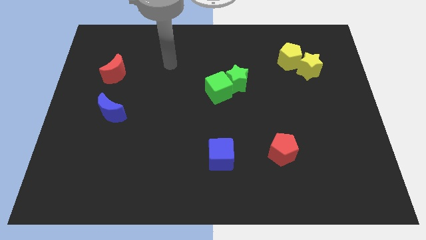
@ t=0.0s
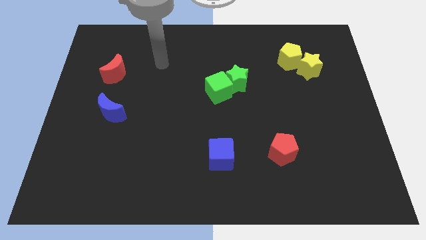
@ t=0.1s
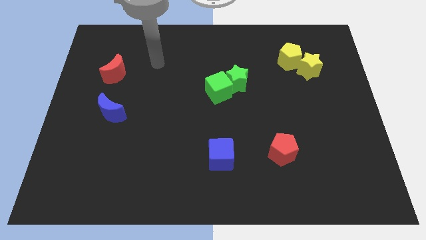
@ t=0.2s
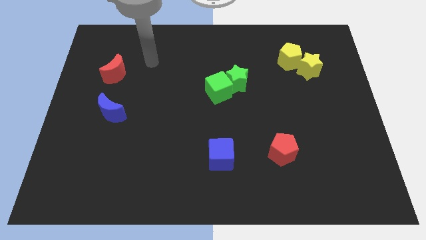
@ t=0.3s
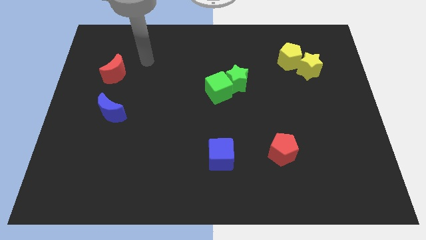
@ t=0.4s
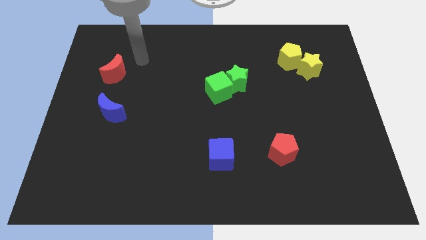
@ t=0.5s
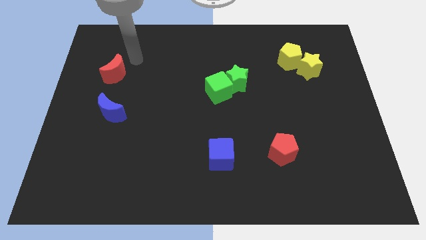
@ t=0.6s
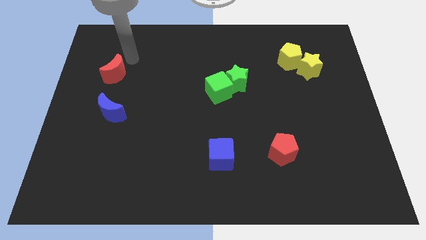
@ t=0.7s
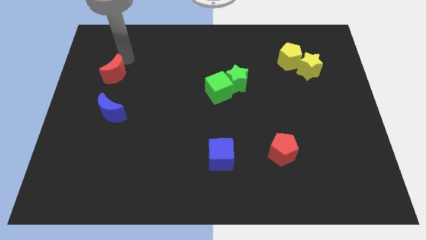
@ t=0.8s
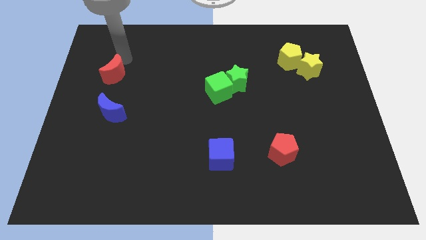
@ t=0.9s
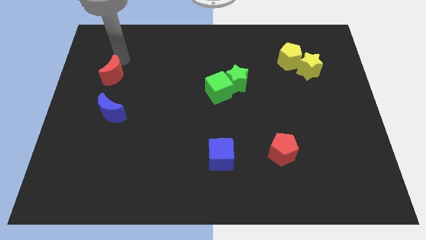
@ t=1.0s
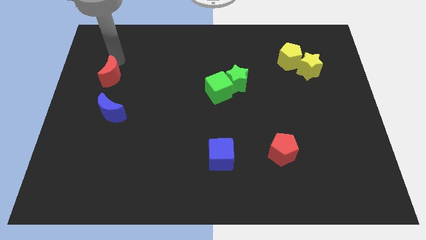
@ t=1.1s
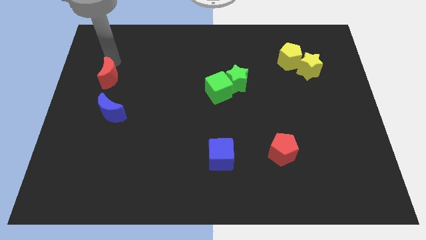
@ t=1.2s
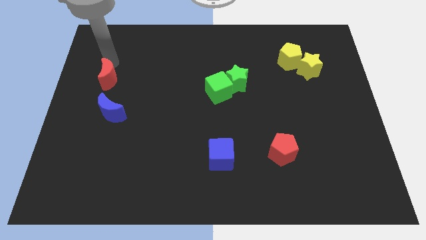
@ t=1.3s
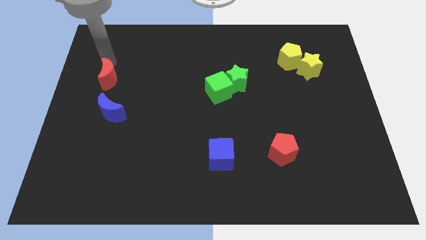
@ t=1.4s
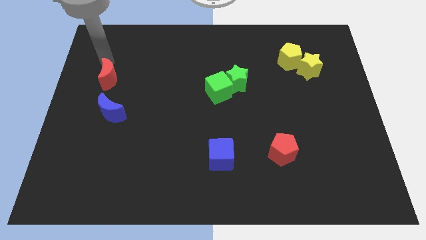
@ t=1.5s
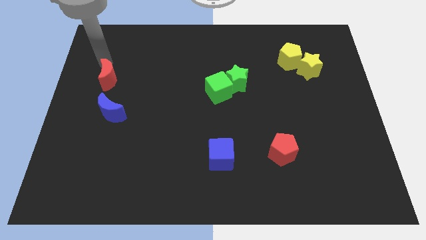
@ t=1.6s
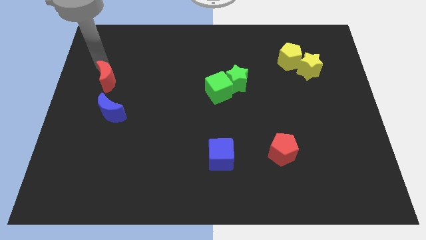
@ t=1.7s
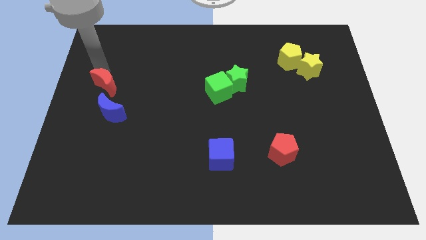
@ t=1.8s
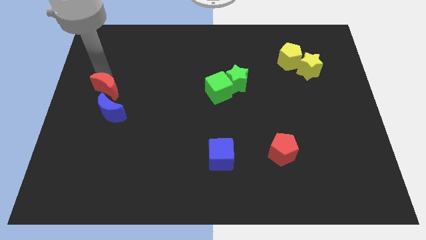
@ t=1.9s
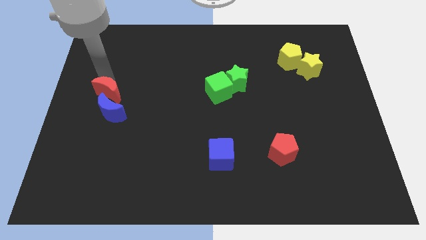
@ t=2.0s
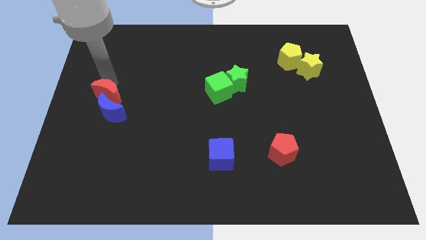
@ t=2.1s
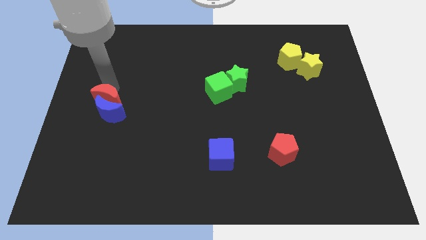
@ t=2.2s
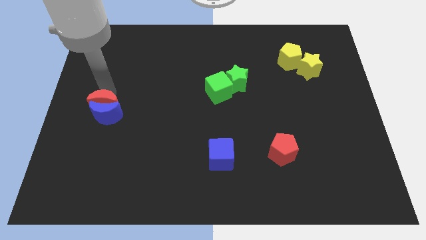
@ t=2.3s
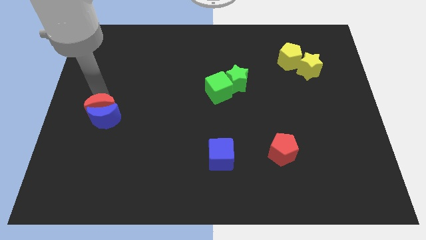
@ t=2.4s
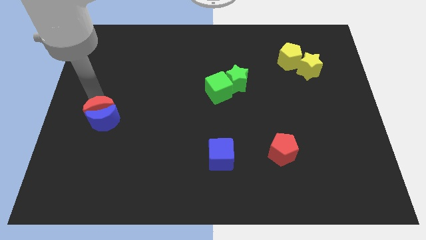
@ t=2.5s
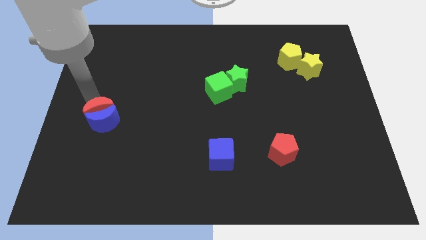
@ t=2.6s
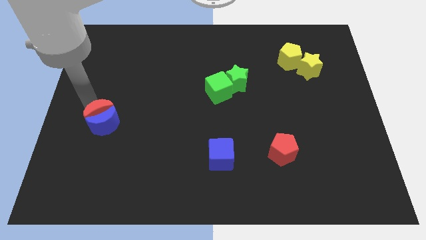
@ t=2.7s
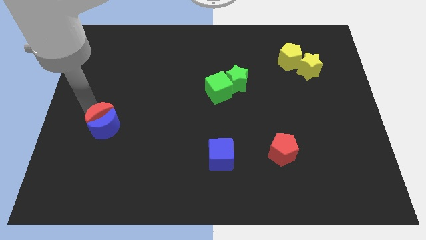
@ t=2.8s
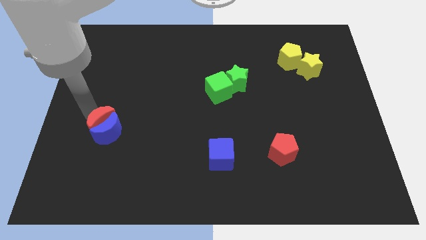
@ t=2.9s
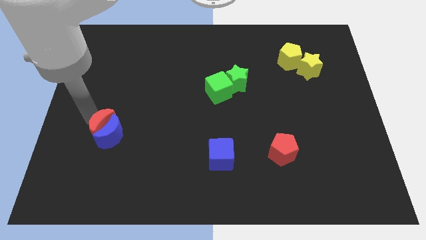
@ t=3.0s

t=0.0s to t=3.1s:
slide red moon into blue moon

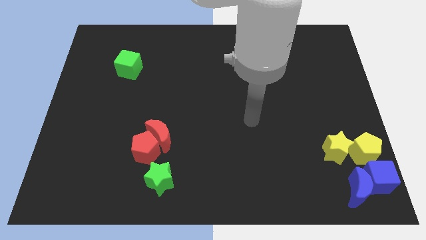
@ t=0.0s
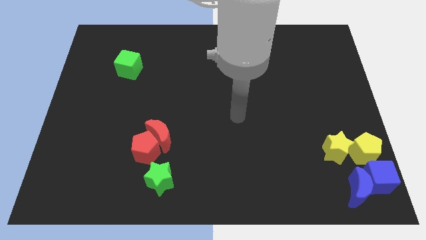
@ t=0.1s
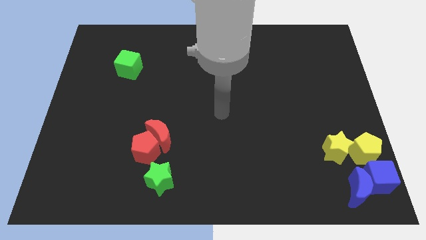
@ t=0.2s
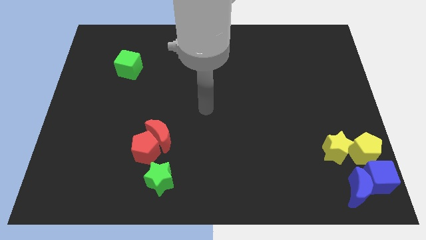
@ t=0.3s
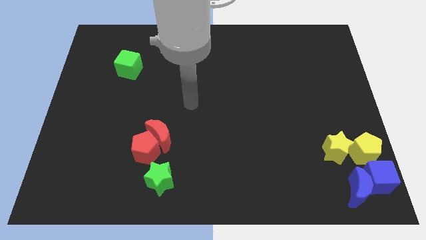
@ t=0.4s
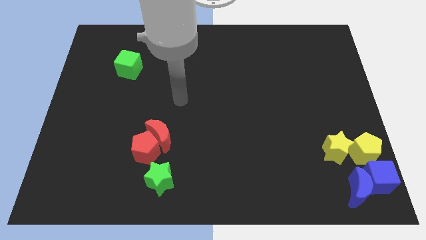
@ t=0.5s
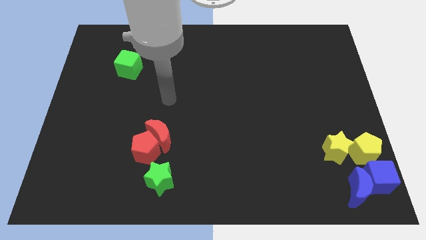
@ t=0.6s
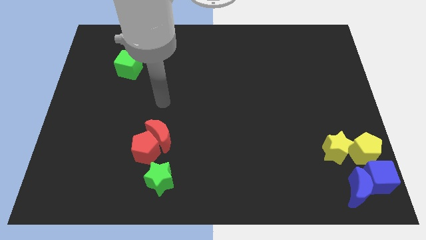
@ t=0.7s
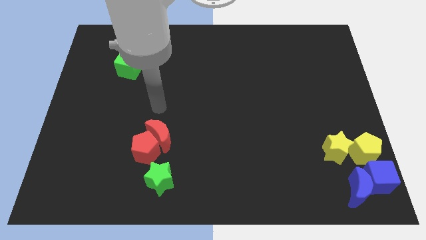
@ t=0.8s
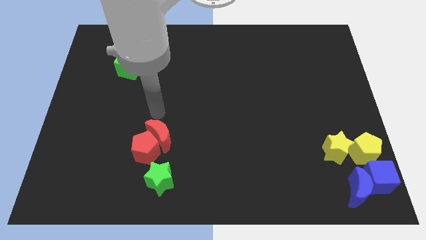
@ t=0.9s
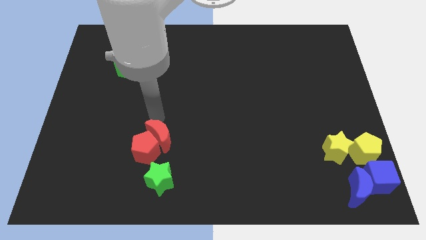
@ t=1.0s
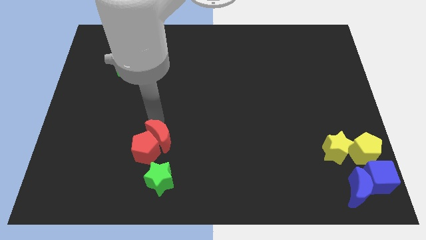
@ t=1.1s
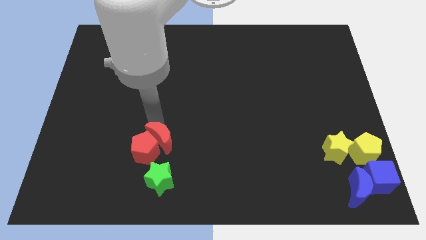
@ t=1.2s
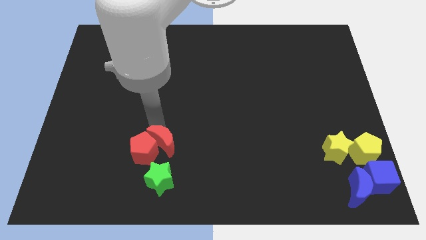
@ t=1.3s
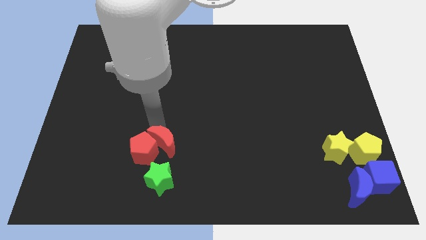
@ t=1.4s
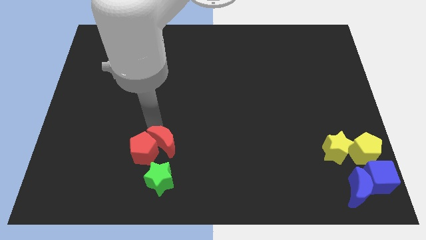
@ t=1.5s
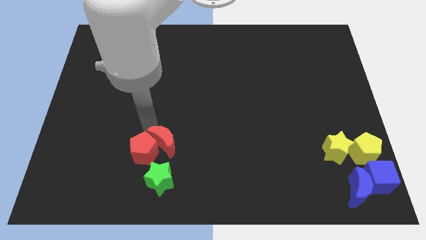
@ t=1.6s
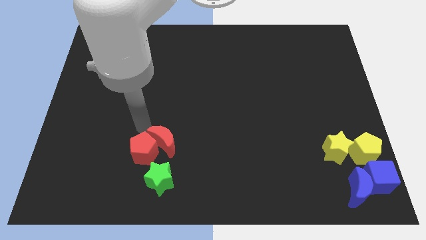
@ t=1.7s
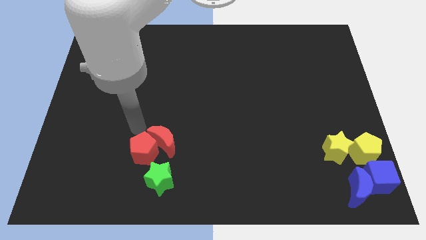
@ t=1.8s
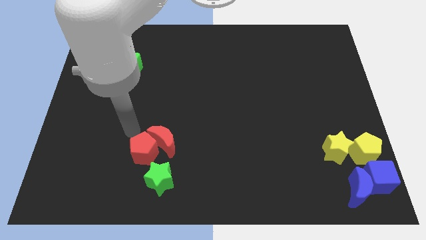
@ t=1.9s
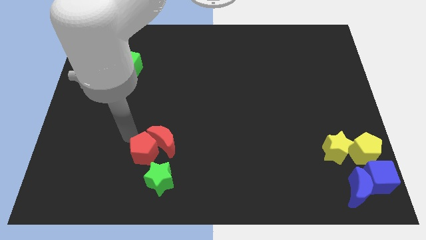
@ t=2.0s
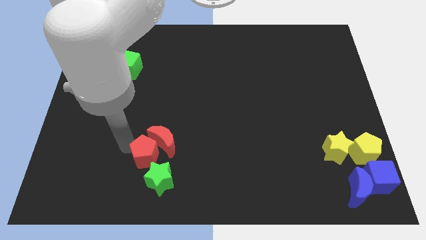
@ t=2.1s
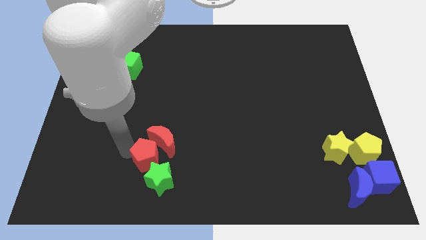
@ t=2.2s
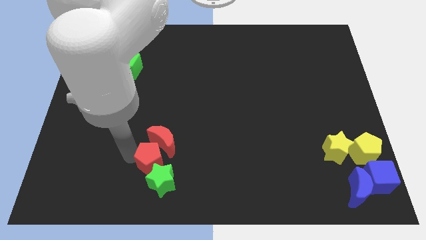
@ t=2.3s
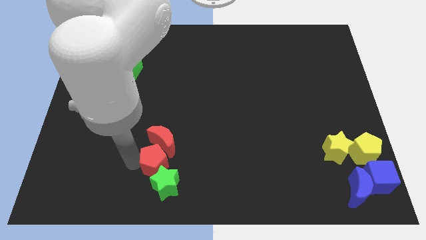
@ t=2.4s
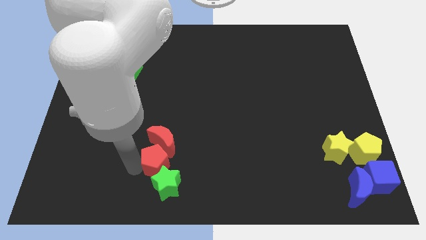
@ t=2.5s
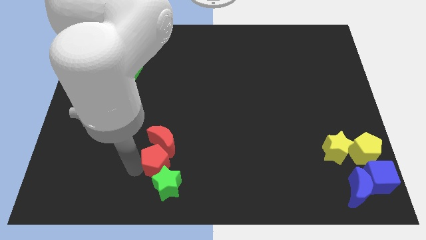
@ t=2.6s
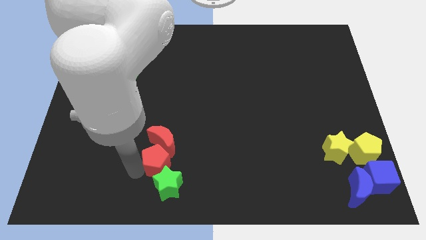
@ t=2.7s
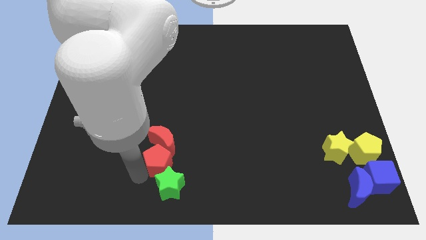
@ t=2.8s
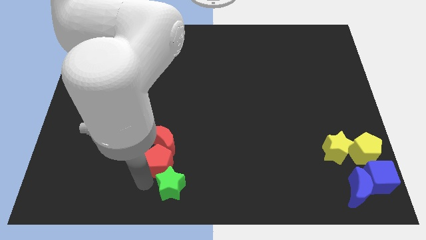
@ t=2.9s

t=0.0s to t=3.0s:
push red blocks slightly downwards

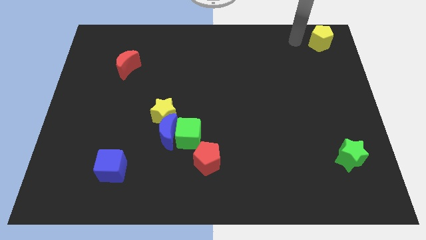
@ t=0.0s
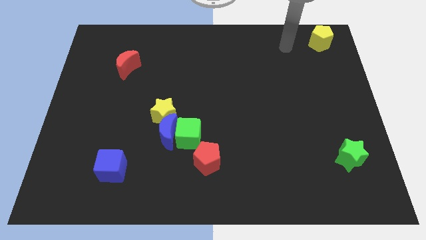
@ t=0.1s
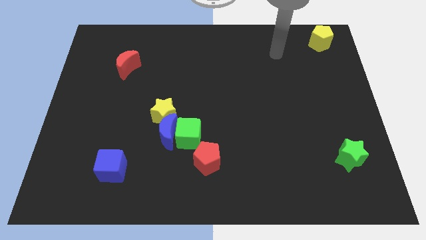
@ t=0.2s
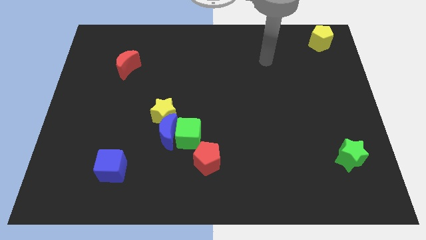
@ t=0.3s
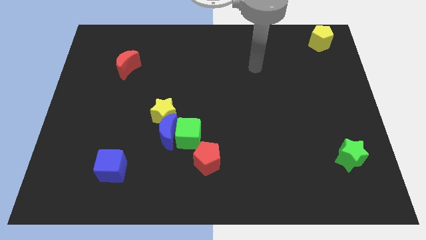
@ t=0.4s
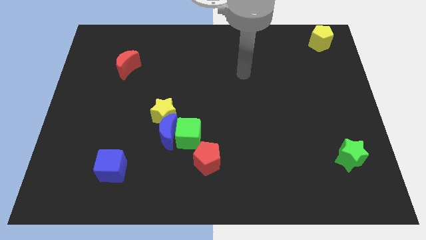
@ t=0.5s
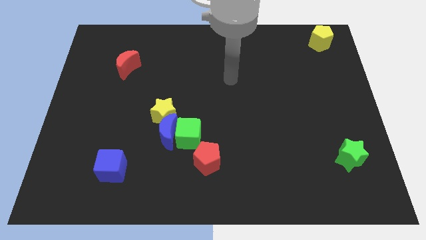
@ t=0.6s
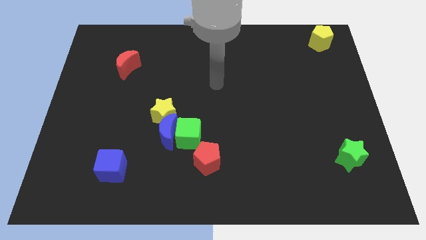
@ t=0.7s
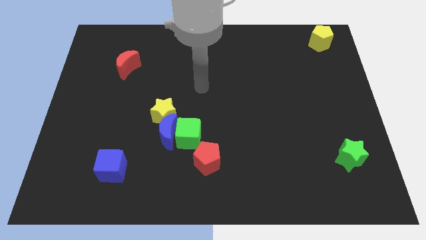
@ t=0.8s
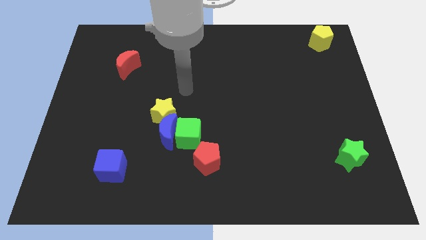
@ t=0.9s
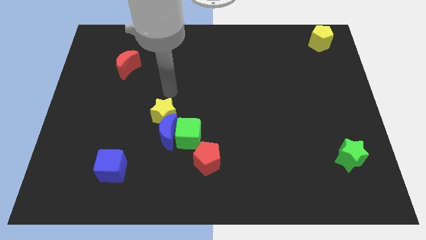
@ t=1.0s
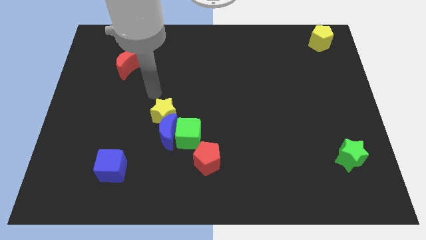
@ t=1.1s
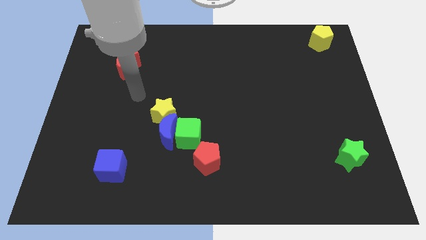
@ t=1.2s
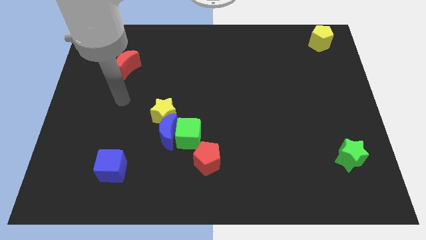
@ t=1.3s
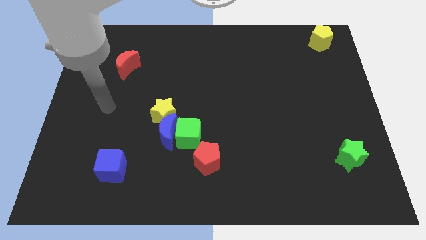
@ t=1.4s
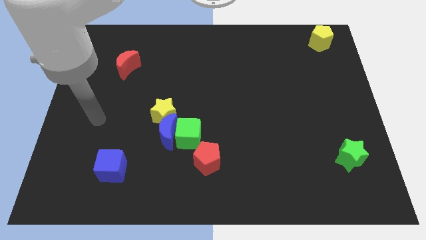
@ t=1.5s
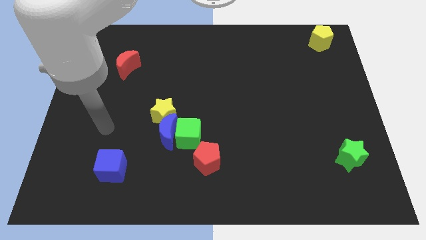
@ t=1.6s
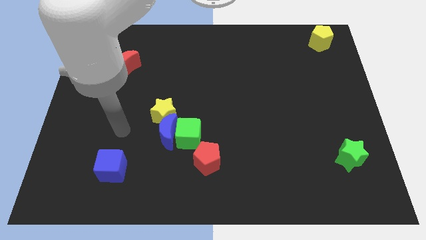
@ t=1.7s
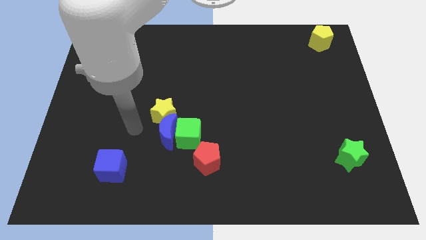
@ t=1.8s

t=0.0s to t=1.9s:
point your arm between the yellow star and blue cube

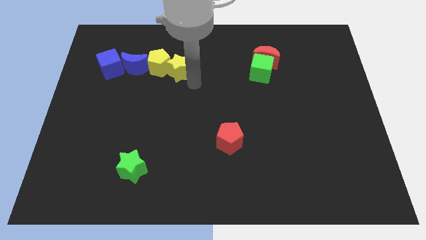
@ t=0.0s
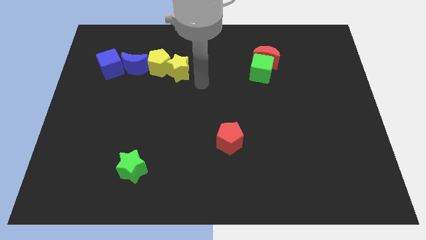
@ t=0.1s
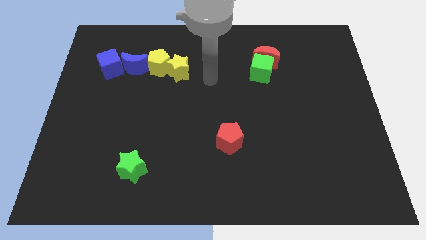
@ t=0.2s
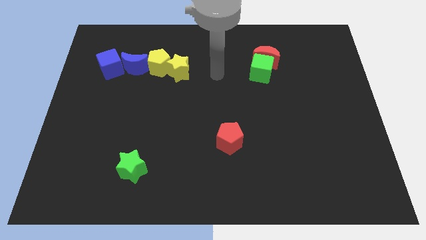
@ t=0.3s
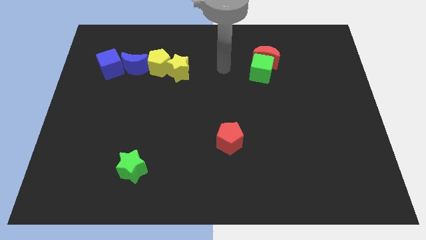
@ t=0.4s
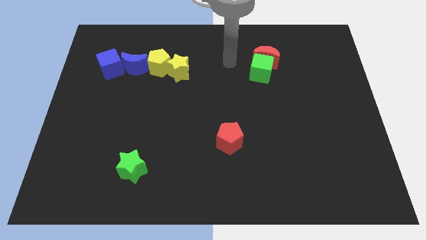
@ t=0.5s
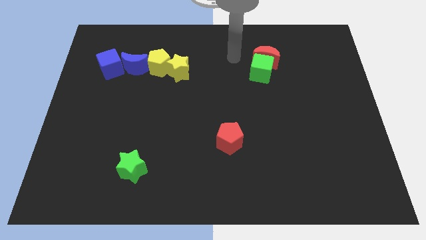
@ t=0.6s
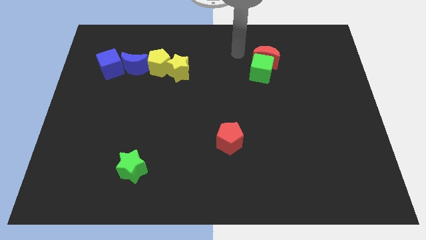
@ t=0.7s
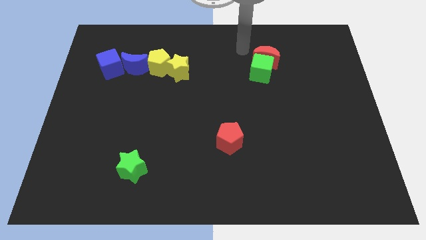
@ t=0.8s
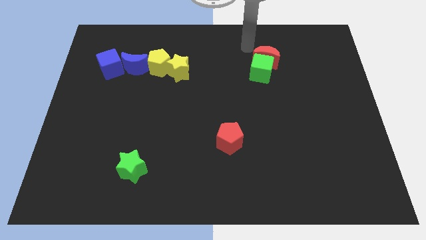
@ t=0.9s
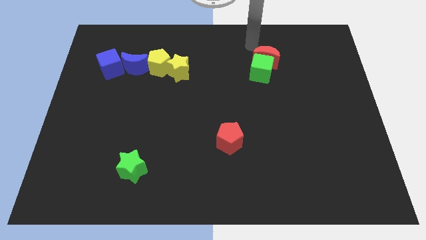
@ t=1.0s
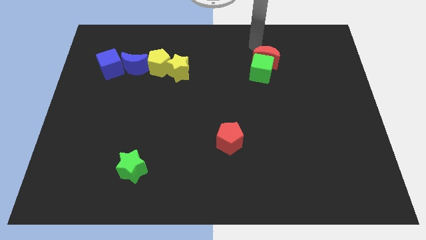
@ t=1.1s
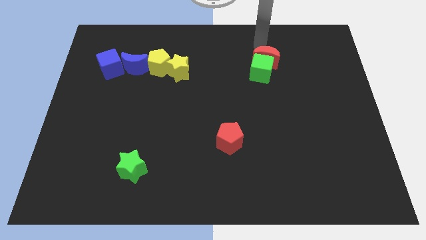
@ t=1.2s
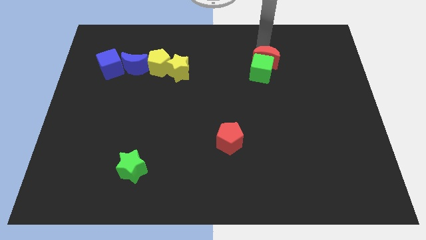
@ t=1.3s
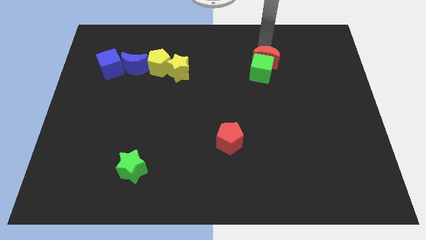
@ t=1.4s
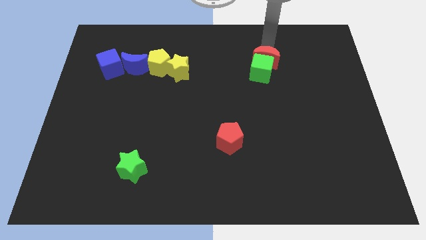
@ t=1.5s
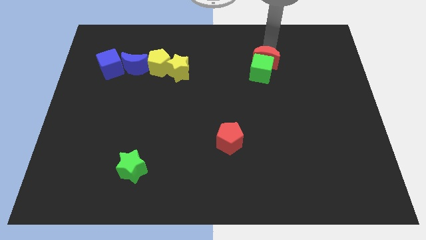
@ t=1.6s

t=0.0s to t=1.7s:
move the arm towards red crescent
